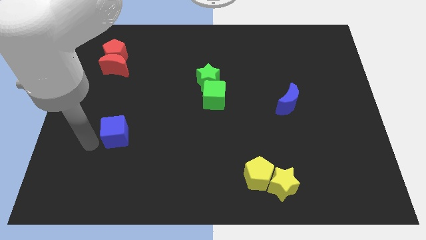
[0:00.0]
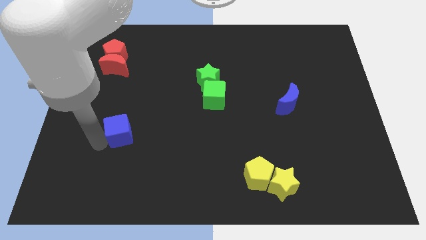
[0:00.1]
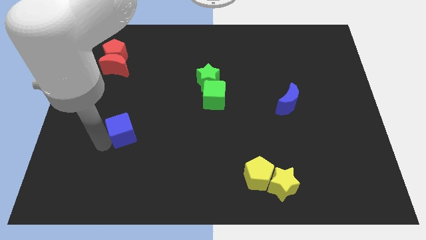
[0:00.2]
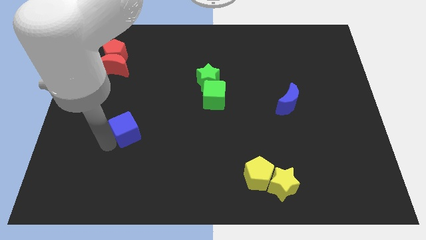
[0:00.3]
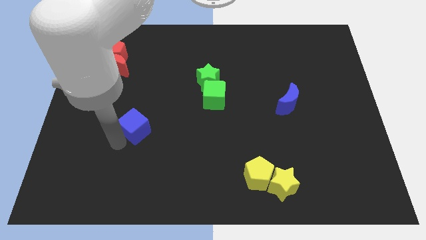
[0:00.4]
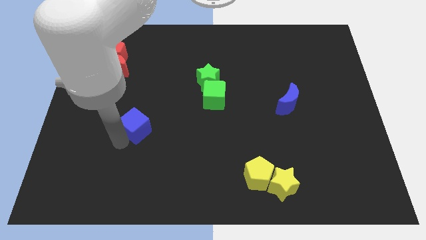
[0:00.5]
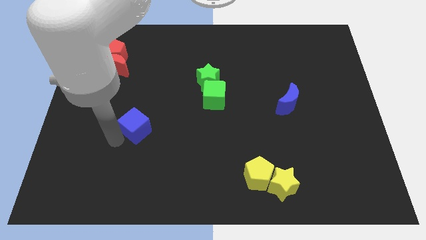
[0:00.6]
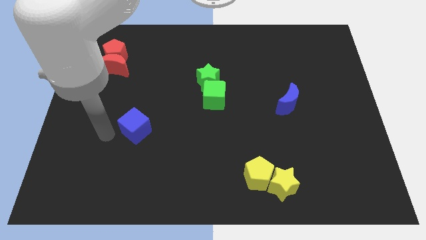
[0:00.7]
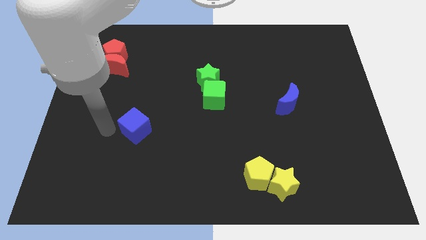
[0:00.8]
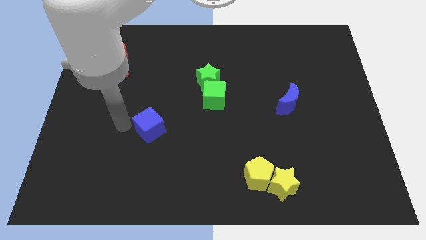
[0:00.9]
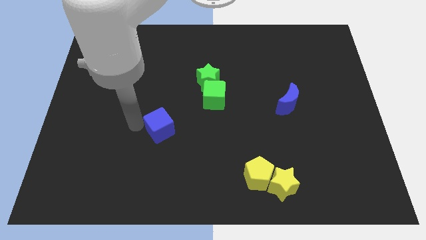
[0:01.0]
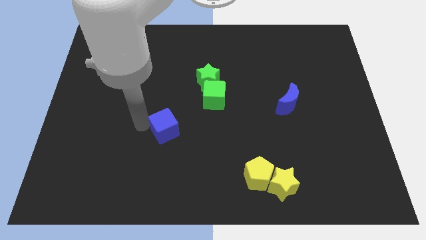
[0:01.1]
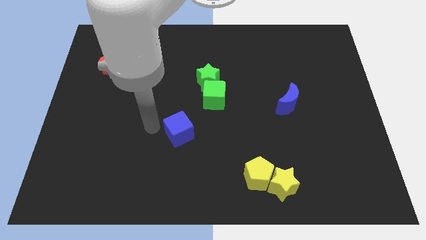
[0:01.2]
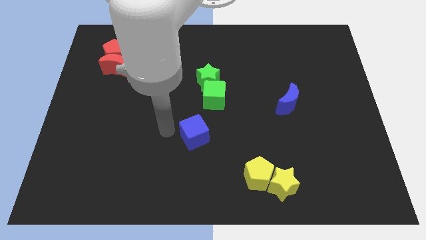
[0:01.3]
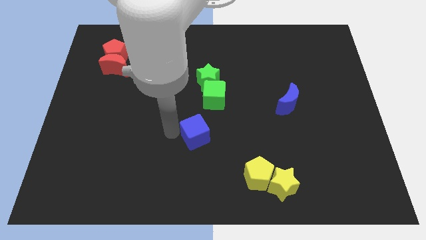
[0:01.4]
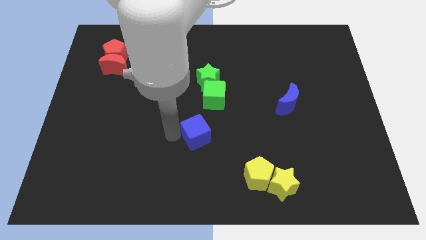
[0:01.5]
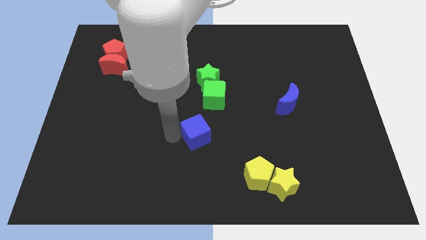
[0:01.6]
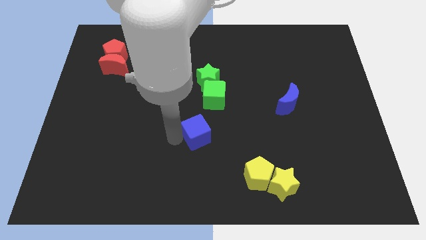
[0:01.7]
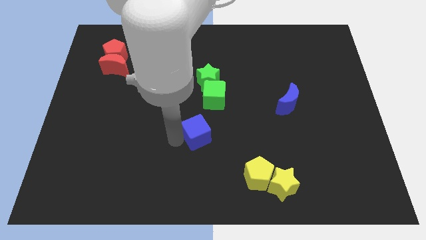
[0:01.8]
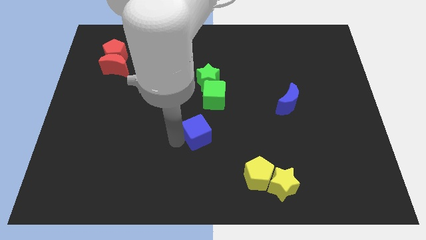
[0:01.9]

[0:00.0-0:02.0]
move the blue cube slightly to the right side

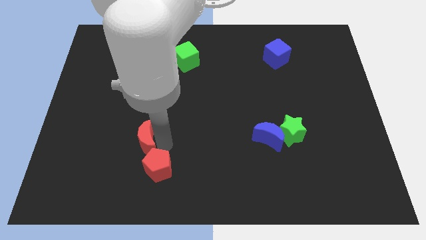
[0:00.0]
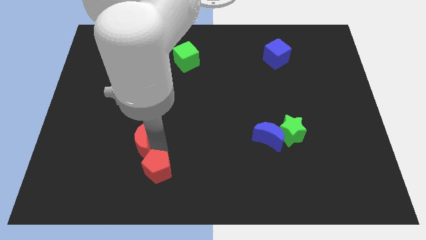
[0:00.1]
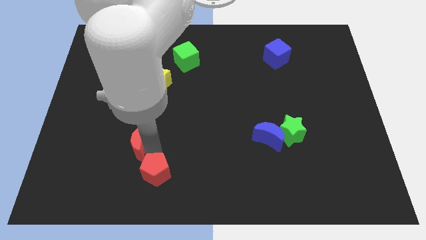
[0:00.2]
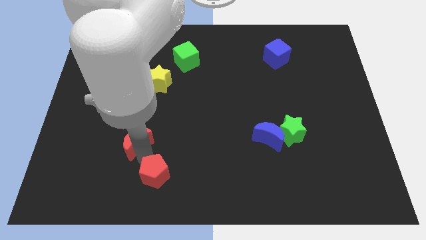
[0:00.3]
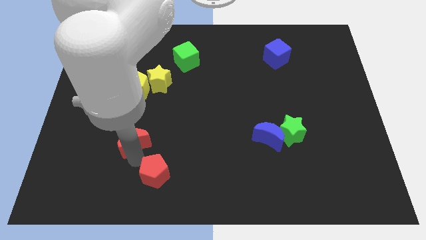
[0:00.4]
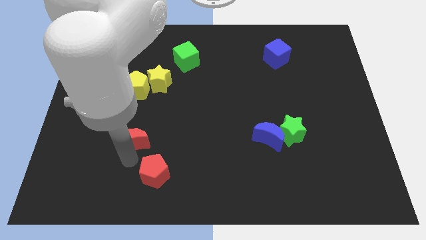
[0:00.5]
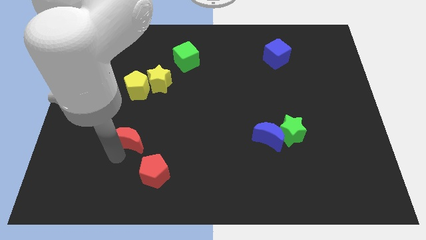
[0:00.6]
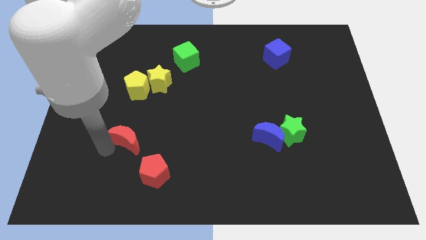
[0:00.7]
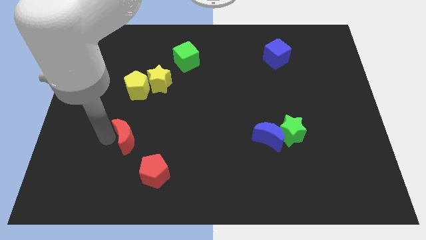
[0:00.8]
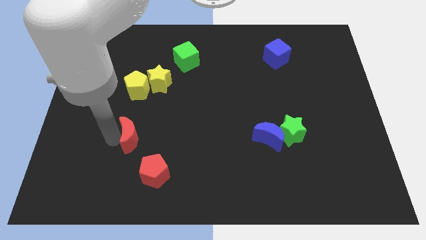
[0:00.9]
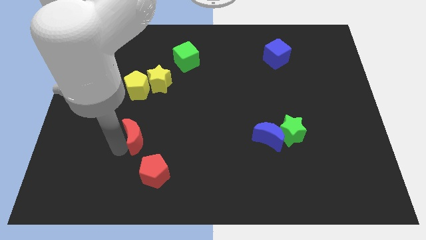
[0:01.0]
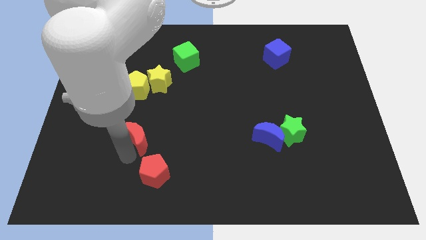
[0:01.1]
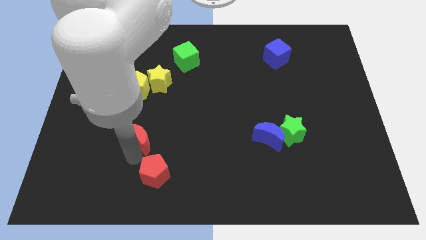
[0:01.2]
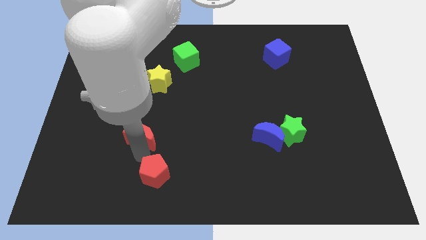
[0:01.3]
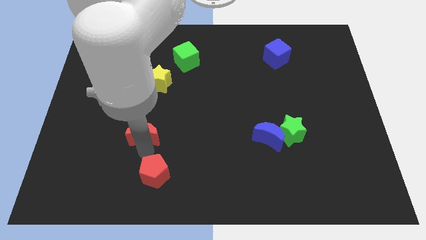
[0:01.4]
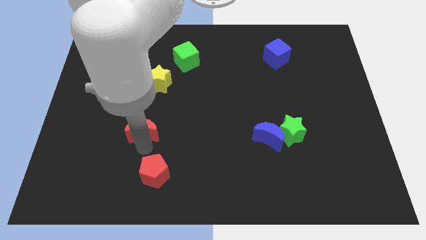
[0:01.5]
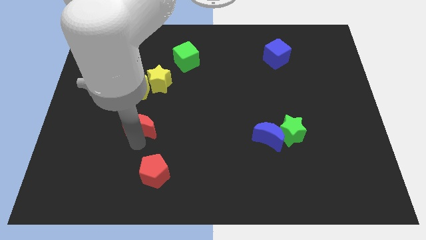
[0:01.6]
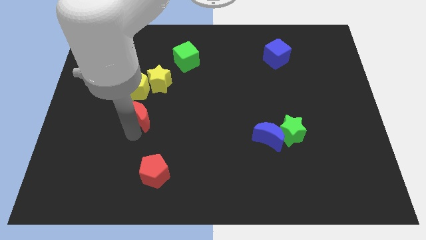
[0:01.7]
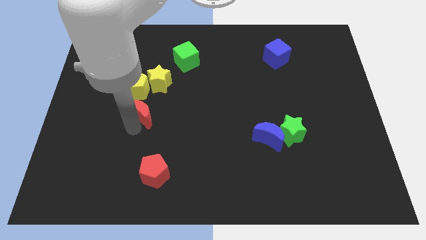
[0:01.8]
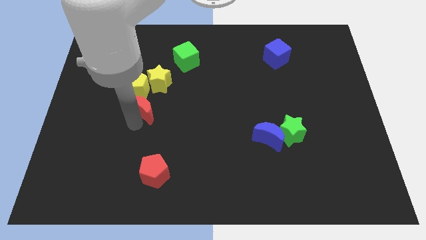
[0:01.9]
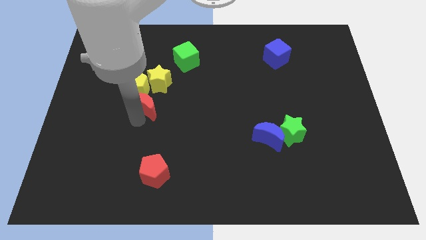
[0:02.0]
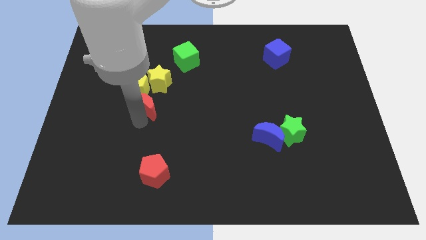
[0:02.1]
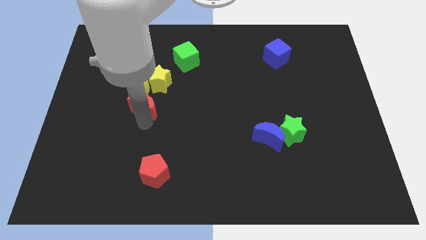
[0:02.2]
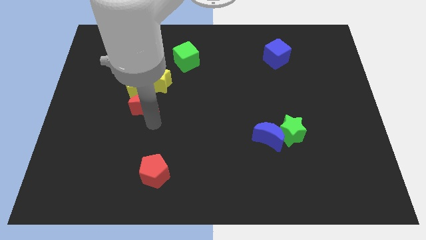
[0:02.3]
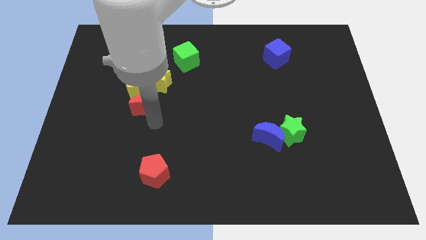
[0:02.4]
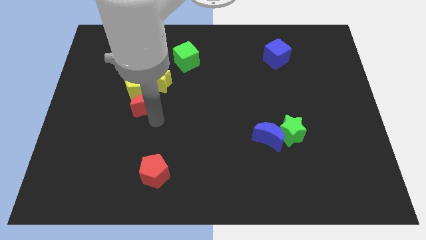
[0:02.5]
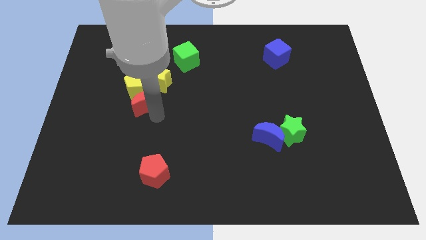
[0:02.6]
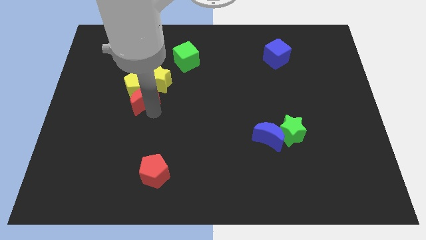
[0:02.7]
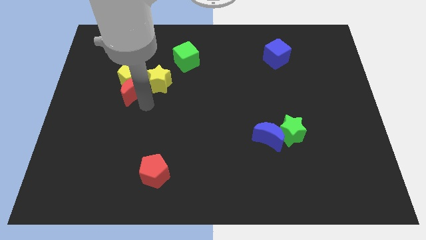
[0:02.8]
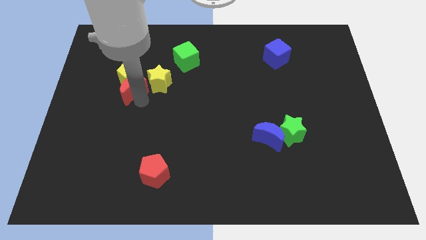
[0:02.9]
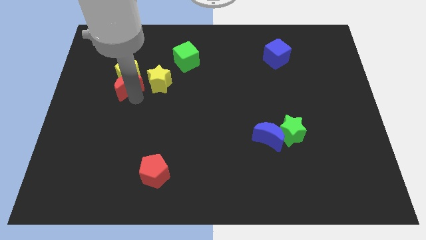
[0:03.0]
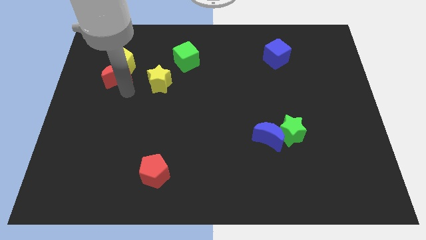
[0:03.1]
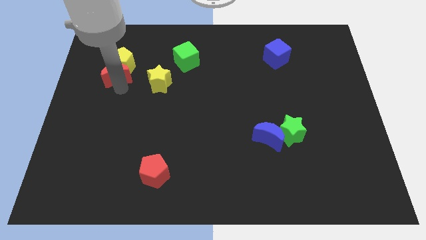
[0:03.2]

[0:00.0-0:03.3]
move red moon into the yellow pentagon

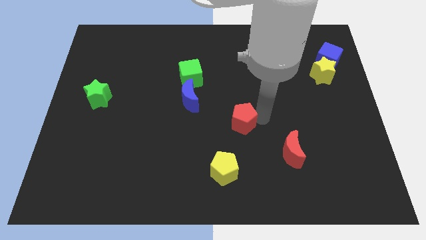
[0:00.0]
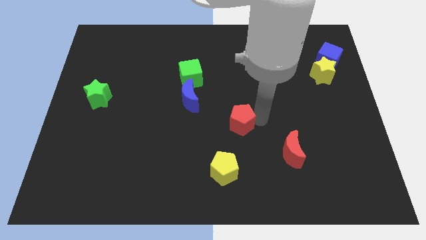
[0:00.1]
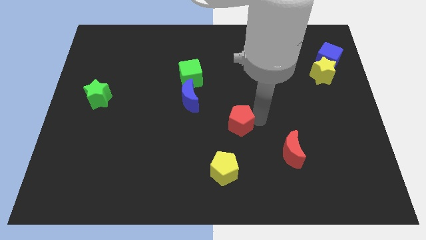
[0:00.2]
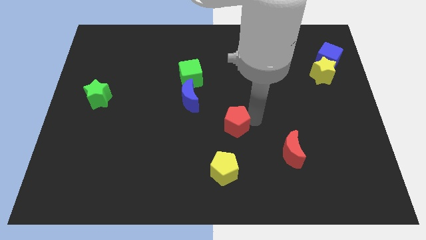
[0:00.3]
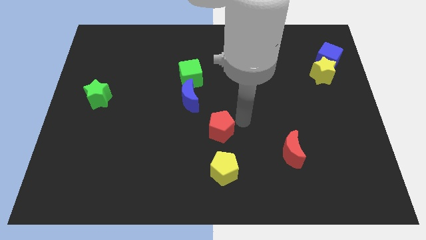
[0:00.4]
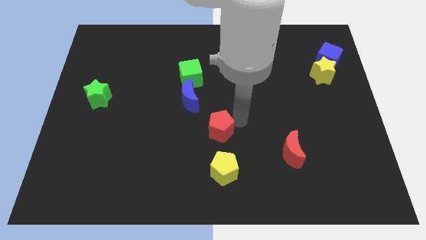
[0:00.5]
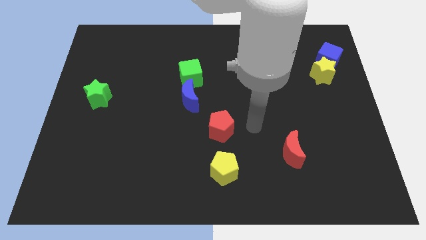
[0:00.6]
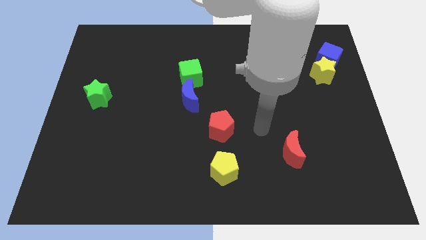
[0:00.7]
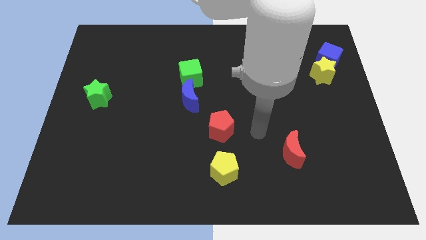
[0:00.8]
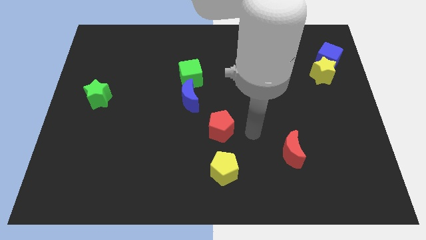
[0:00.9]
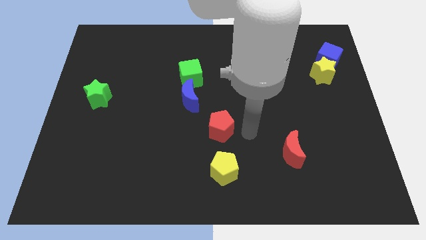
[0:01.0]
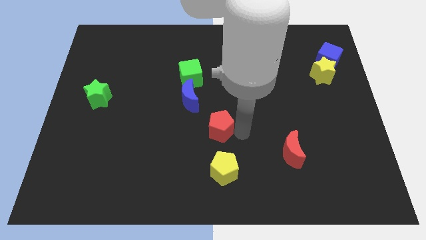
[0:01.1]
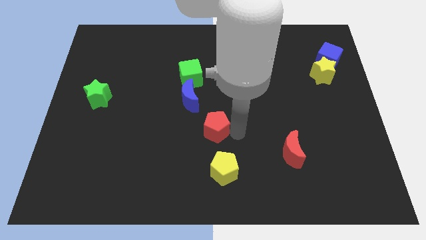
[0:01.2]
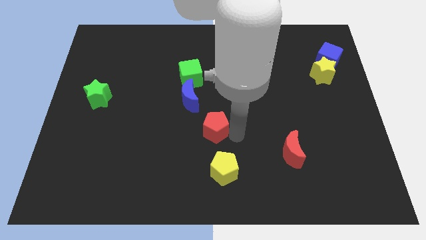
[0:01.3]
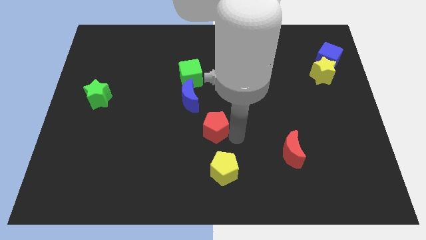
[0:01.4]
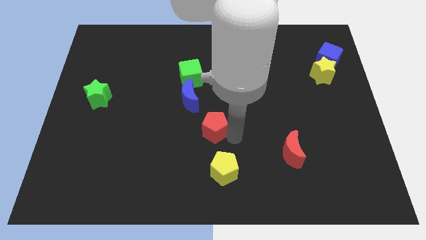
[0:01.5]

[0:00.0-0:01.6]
push red pentagon above the yellow pentagon

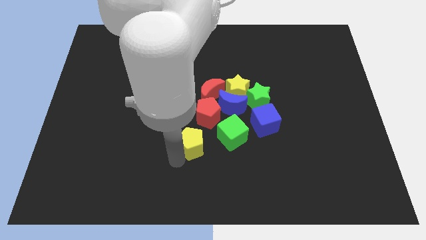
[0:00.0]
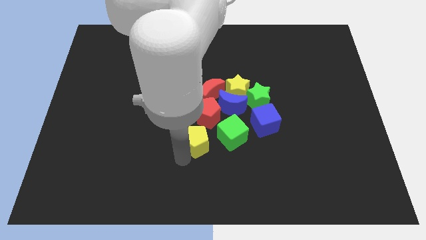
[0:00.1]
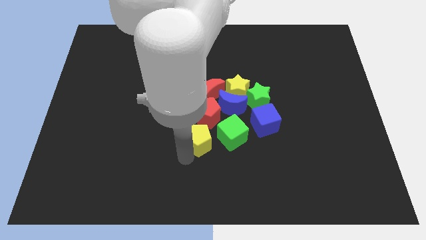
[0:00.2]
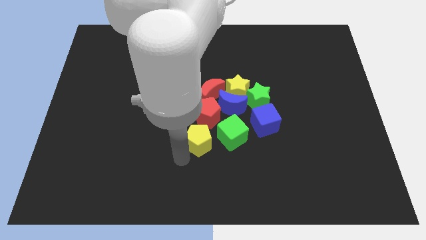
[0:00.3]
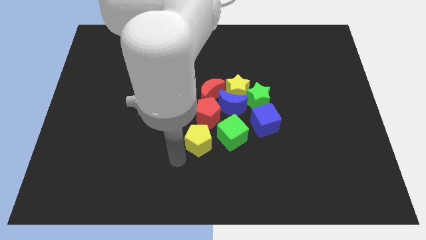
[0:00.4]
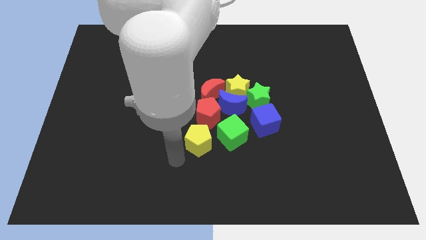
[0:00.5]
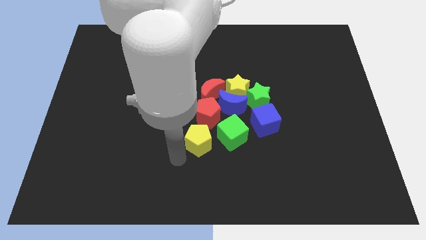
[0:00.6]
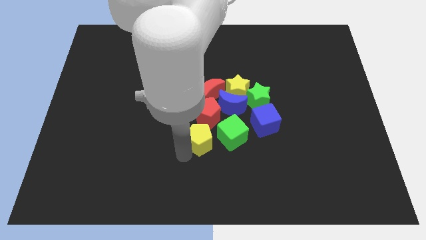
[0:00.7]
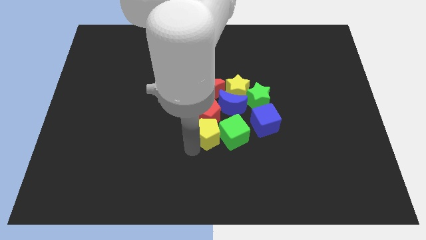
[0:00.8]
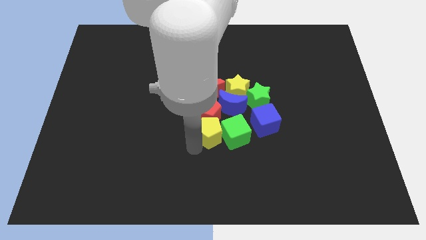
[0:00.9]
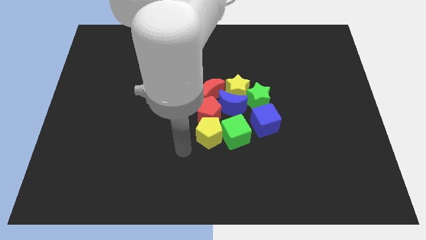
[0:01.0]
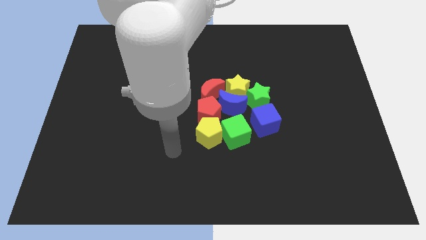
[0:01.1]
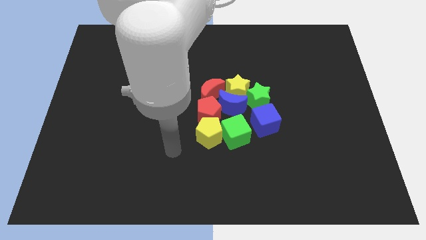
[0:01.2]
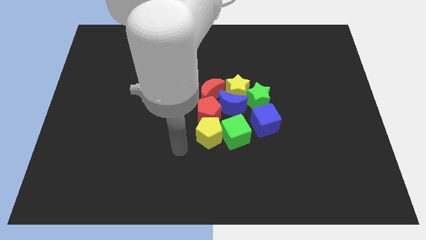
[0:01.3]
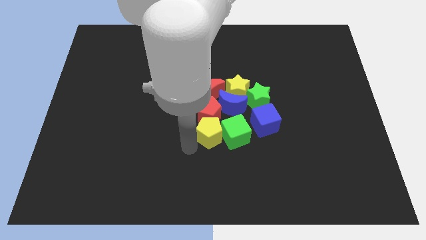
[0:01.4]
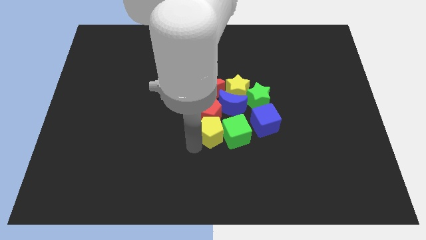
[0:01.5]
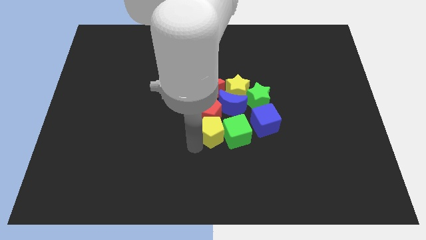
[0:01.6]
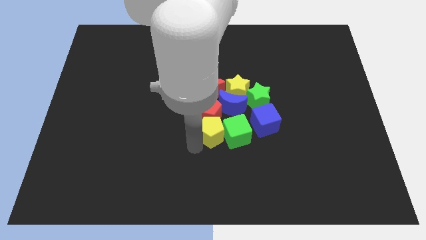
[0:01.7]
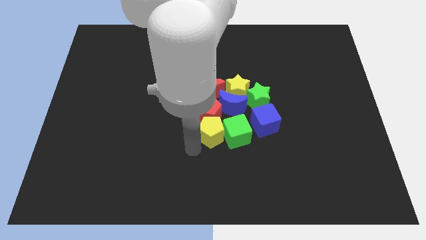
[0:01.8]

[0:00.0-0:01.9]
place the yellow pentagon below the red pentagon
